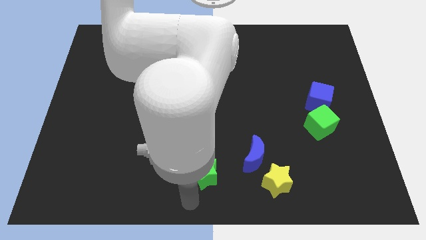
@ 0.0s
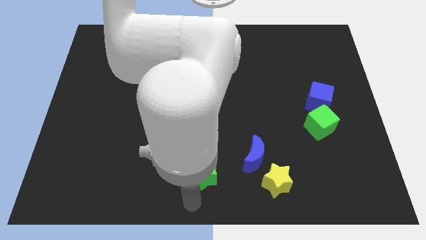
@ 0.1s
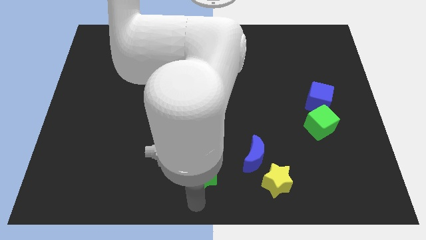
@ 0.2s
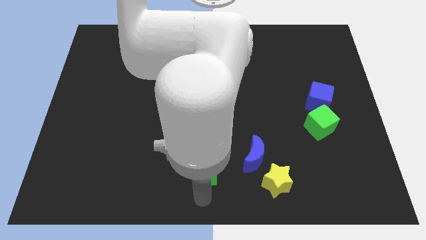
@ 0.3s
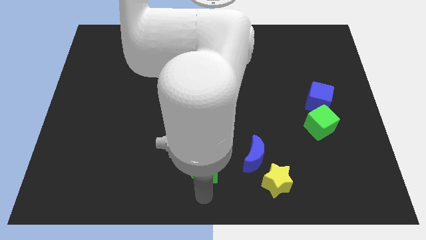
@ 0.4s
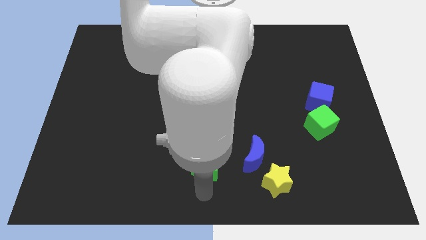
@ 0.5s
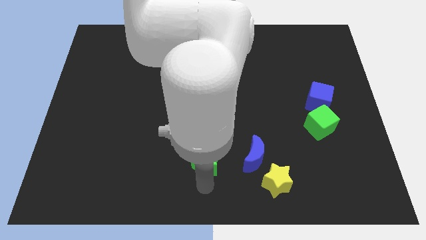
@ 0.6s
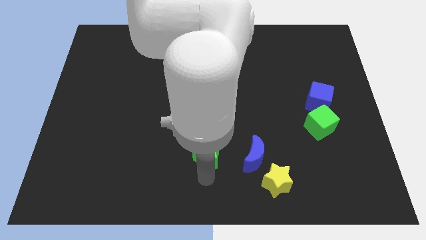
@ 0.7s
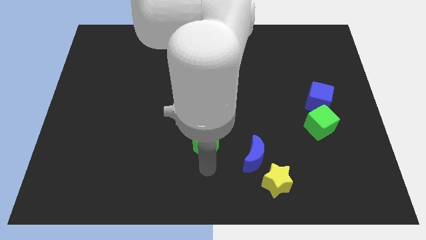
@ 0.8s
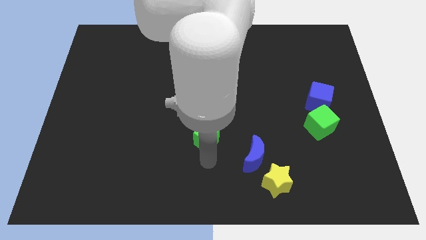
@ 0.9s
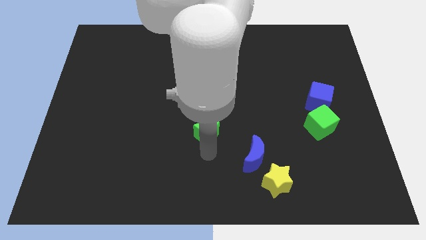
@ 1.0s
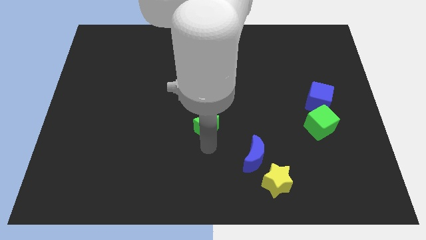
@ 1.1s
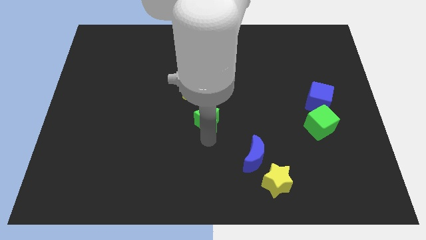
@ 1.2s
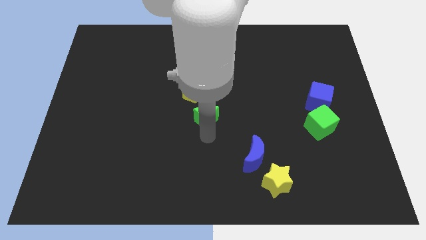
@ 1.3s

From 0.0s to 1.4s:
move the green star to the center of the board

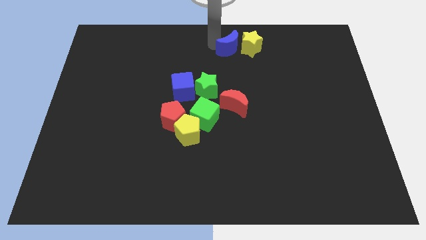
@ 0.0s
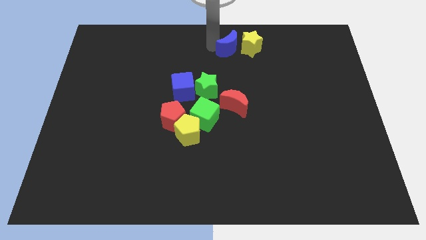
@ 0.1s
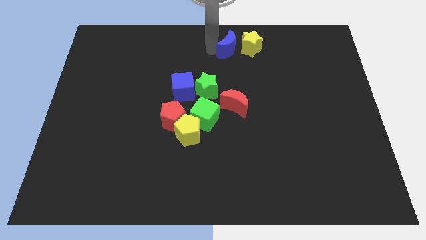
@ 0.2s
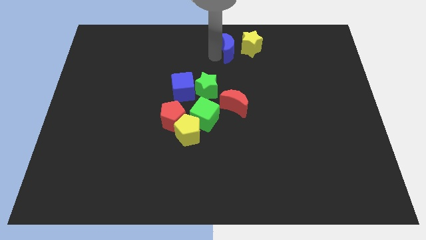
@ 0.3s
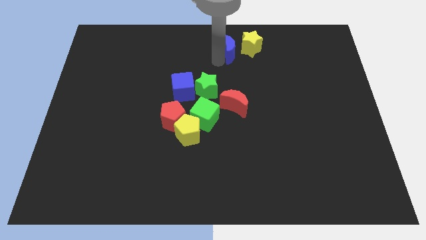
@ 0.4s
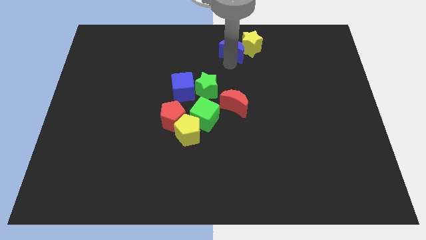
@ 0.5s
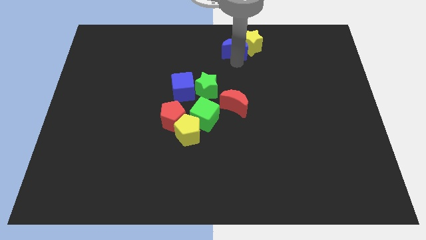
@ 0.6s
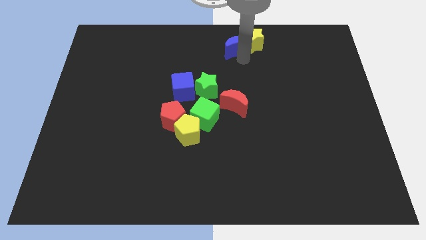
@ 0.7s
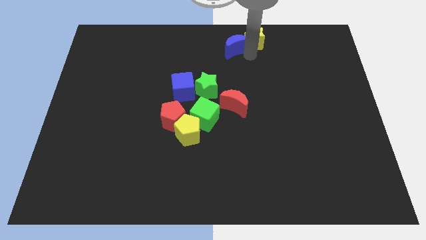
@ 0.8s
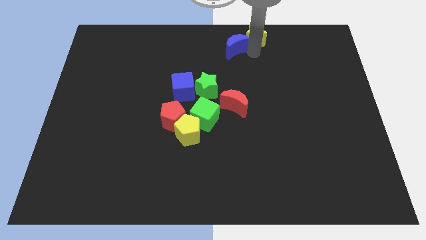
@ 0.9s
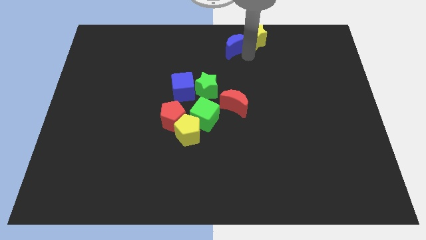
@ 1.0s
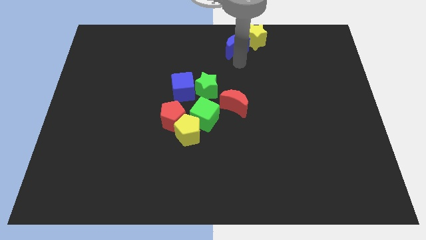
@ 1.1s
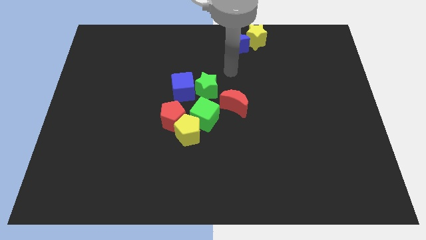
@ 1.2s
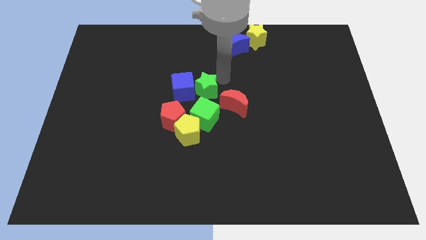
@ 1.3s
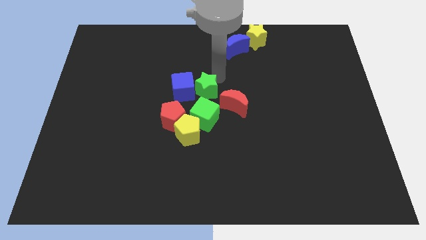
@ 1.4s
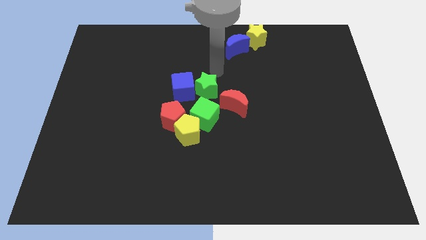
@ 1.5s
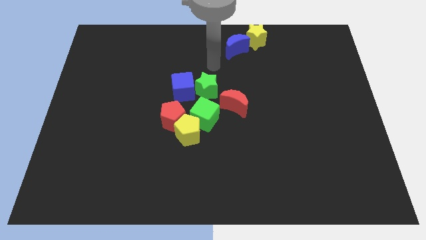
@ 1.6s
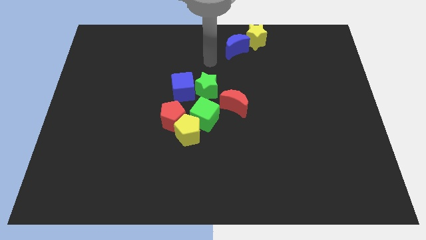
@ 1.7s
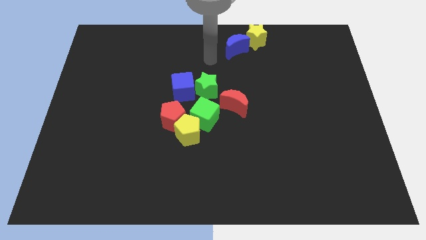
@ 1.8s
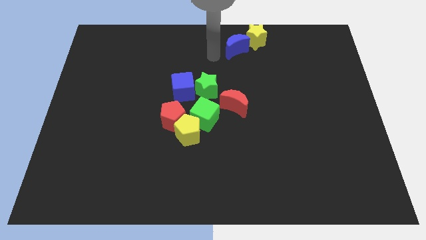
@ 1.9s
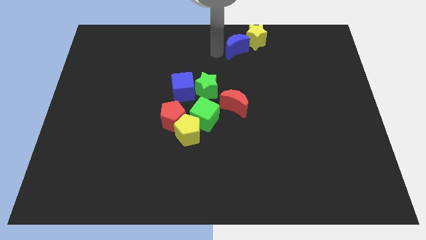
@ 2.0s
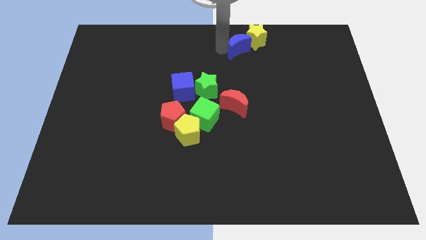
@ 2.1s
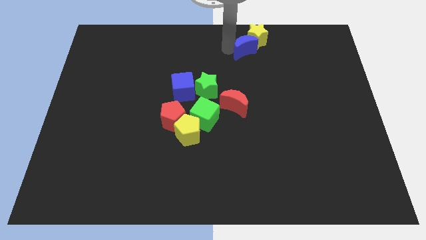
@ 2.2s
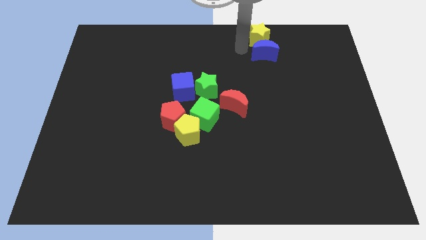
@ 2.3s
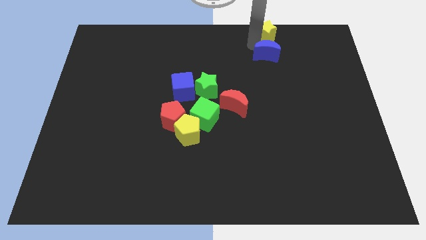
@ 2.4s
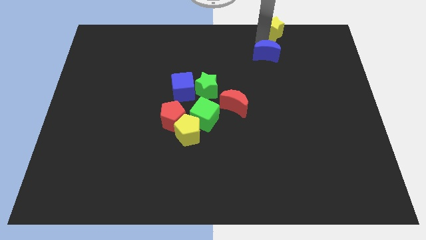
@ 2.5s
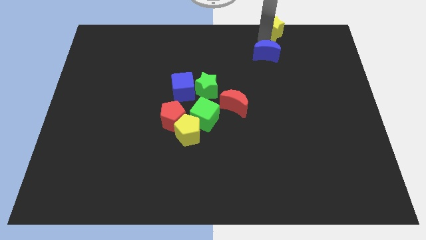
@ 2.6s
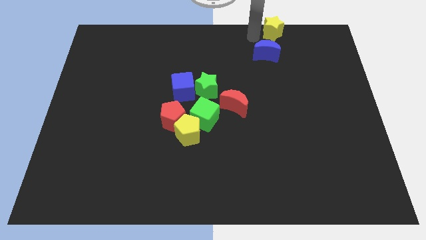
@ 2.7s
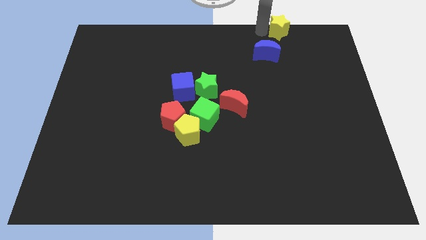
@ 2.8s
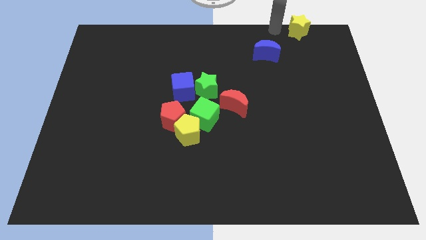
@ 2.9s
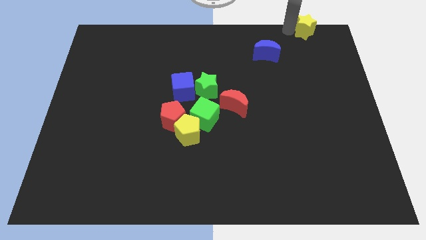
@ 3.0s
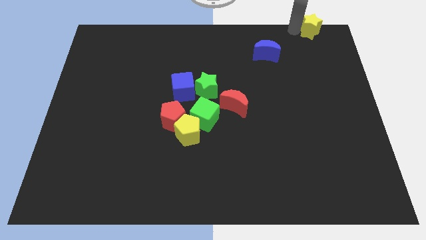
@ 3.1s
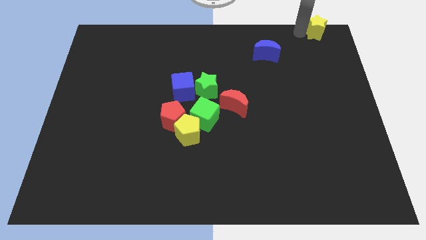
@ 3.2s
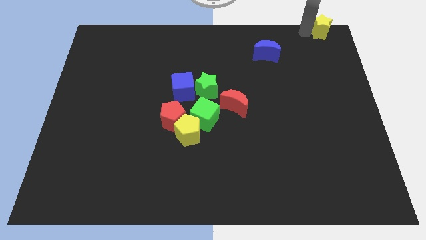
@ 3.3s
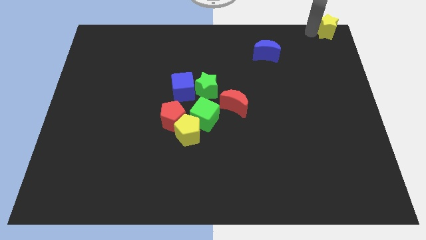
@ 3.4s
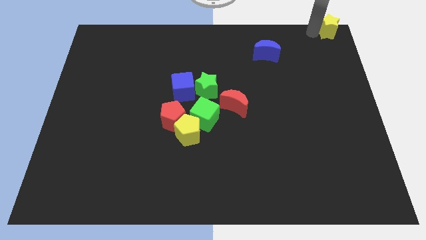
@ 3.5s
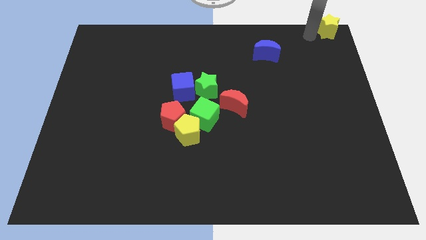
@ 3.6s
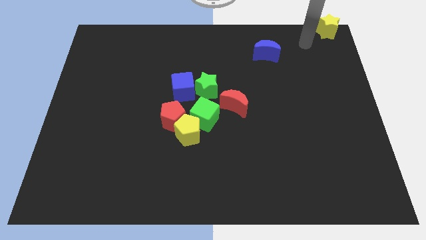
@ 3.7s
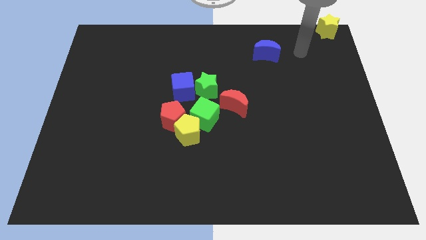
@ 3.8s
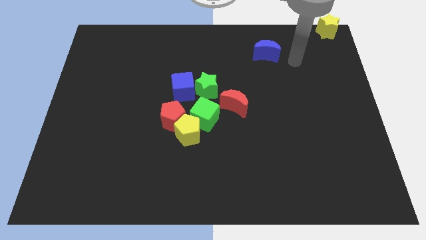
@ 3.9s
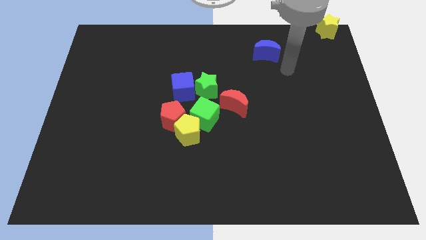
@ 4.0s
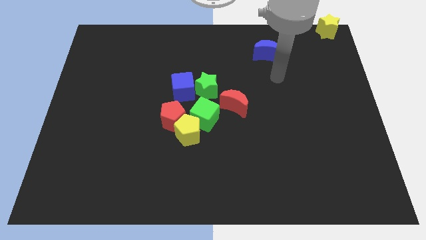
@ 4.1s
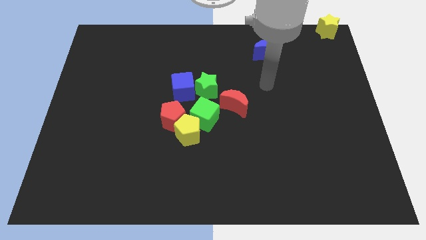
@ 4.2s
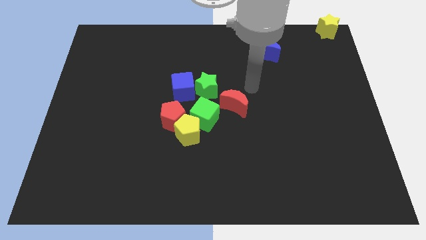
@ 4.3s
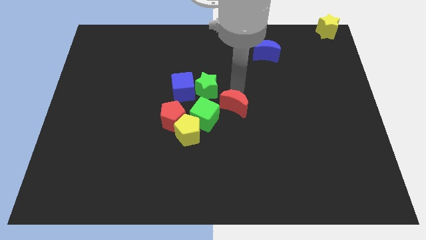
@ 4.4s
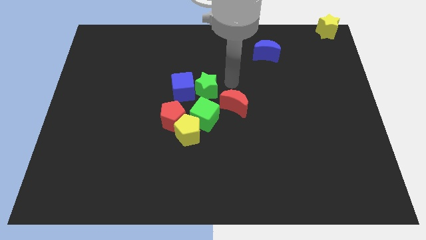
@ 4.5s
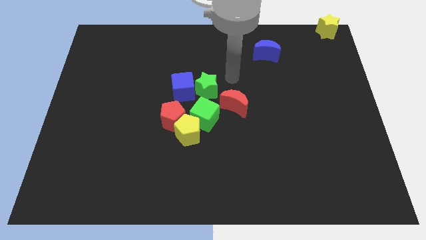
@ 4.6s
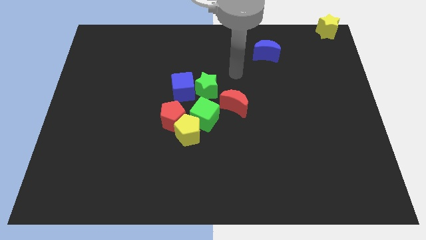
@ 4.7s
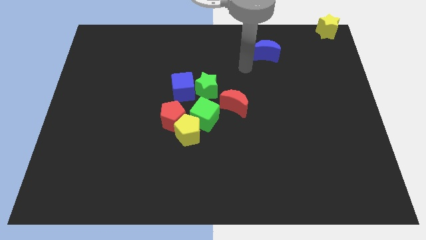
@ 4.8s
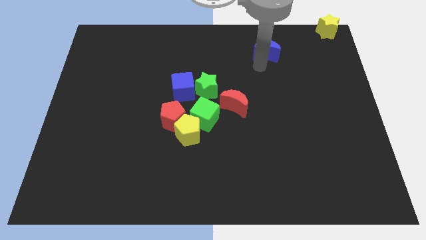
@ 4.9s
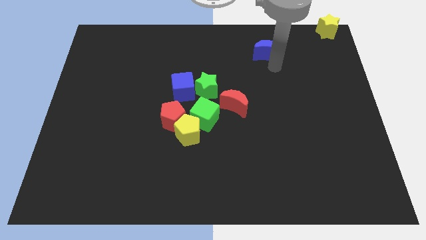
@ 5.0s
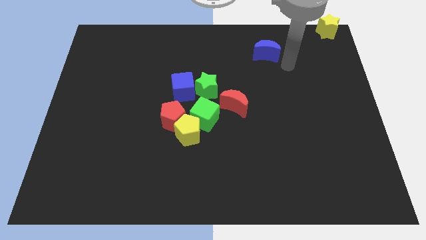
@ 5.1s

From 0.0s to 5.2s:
separate the blue crescent and yellow pentagon

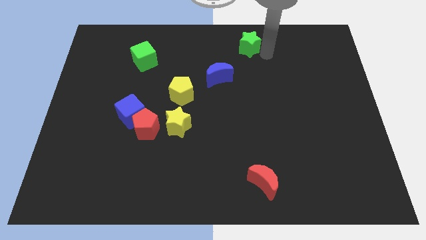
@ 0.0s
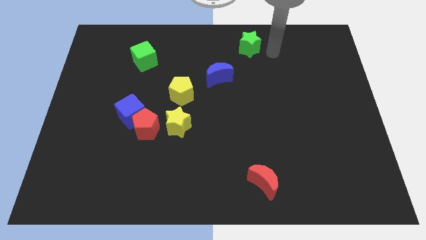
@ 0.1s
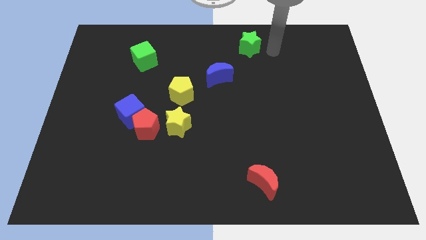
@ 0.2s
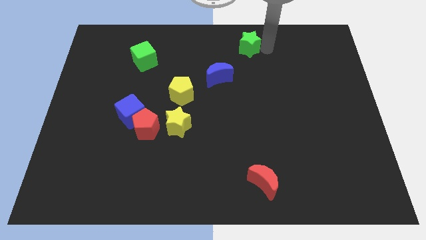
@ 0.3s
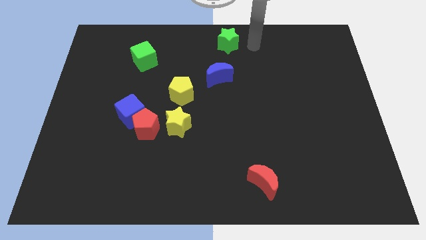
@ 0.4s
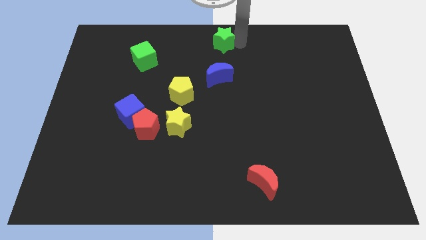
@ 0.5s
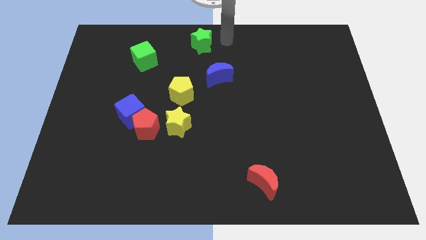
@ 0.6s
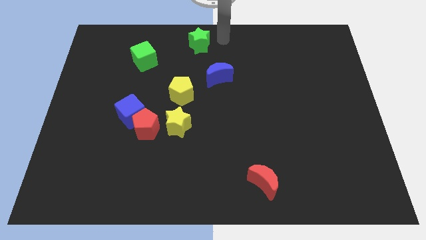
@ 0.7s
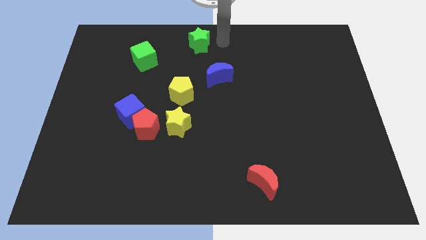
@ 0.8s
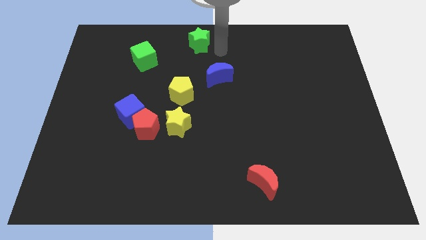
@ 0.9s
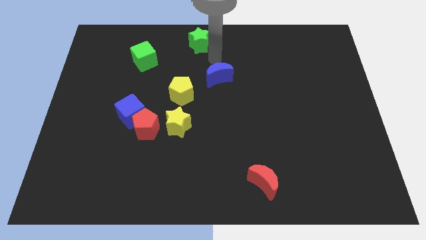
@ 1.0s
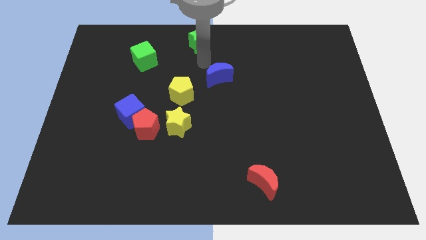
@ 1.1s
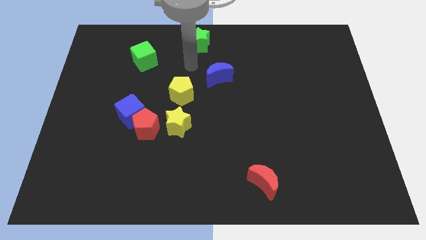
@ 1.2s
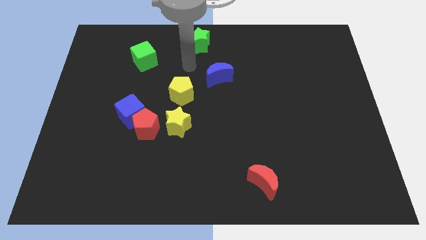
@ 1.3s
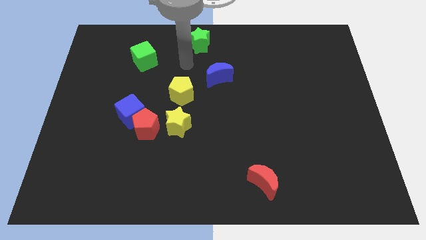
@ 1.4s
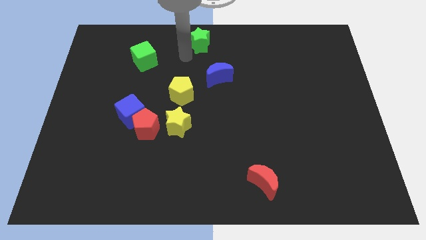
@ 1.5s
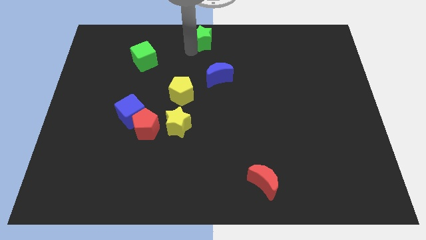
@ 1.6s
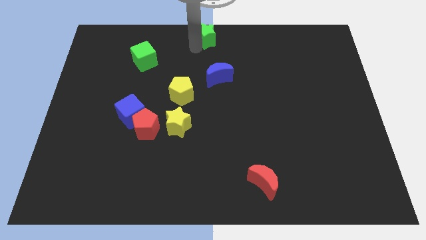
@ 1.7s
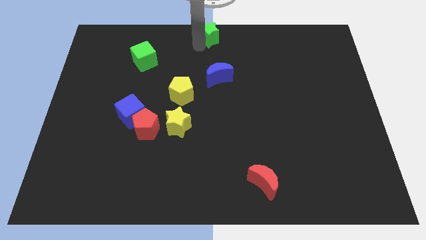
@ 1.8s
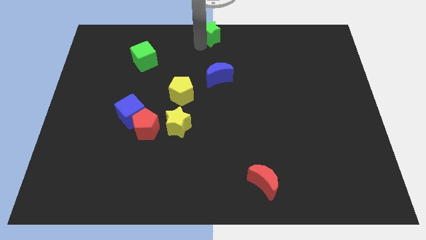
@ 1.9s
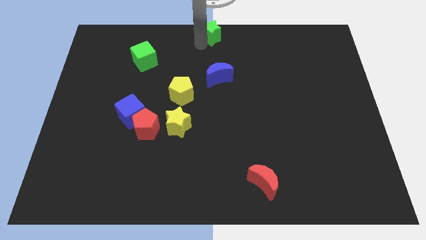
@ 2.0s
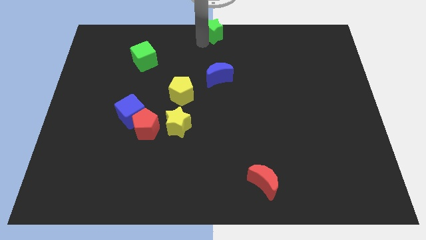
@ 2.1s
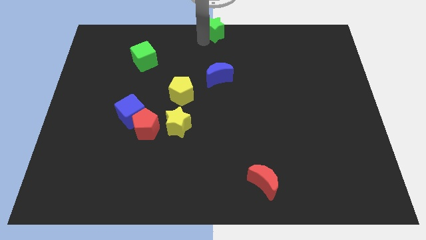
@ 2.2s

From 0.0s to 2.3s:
move the green star towards top center of the board

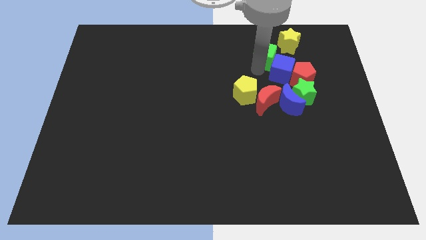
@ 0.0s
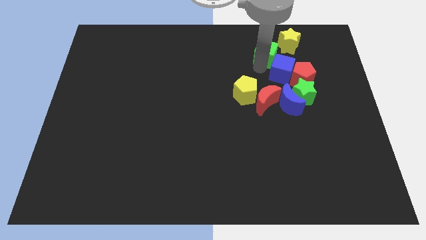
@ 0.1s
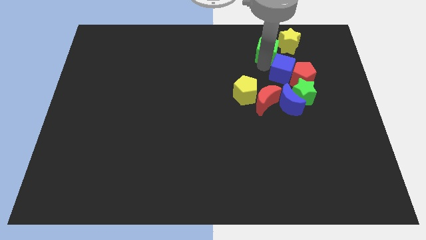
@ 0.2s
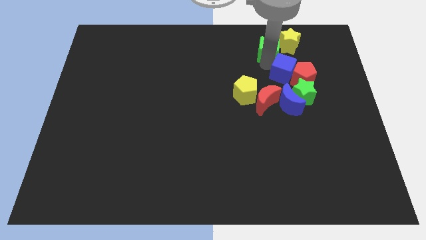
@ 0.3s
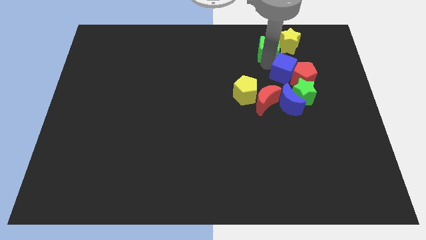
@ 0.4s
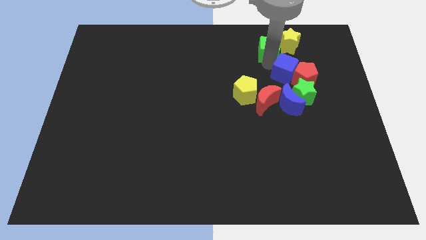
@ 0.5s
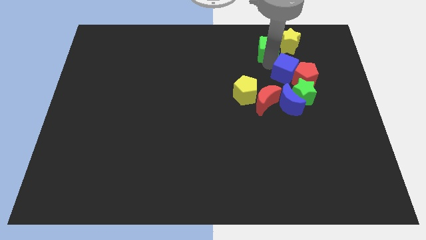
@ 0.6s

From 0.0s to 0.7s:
touch left to the blue cube
